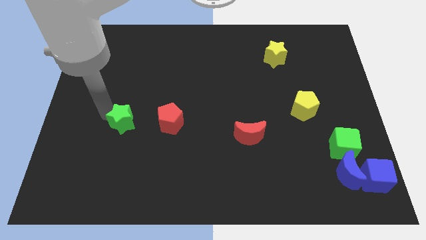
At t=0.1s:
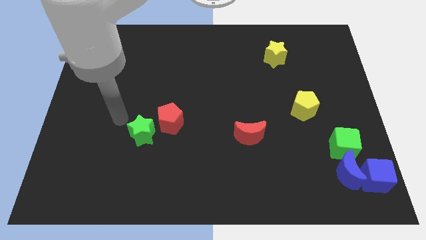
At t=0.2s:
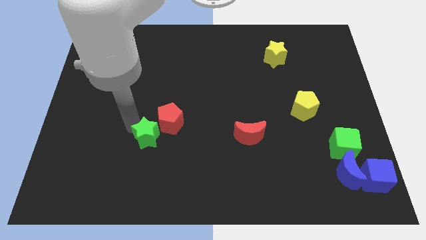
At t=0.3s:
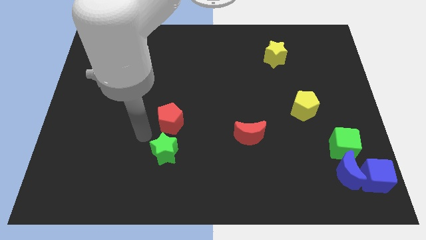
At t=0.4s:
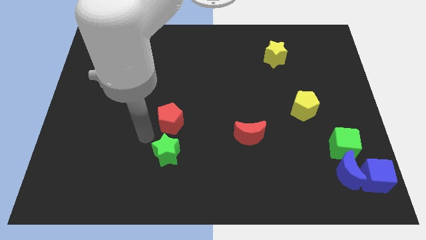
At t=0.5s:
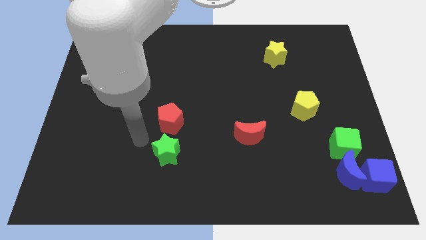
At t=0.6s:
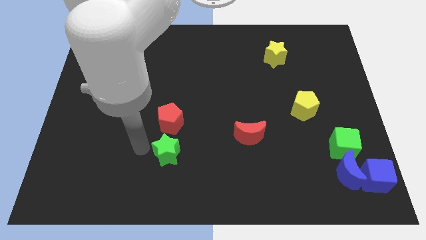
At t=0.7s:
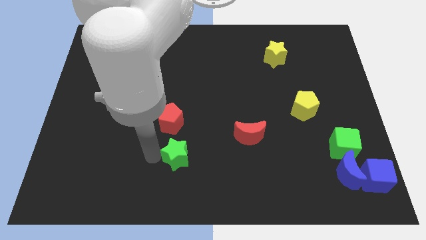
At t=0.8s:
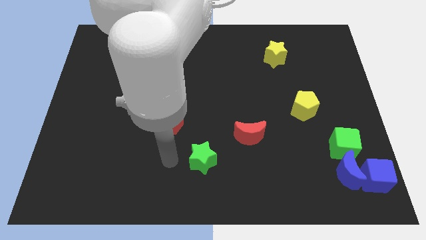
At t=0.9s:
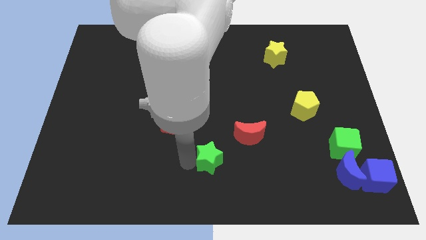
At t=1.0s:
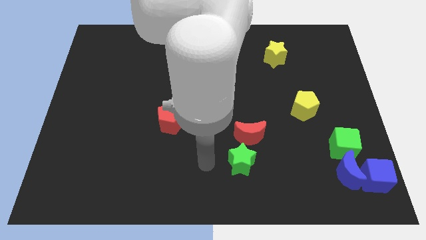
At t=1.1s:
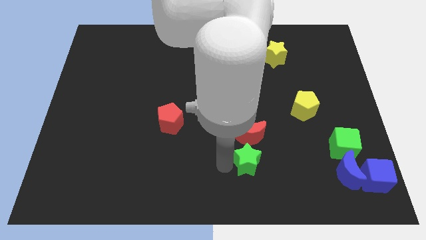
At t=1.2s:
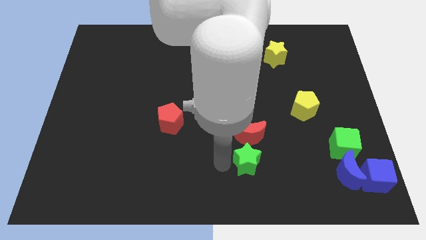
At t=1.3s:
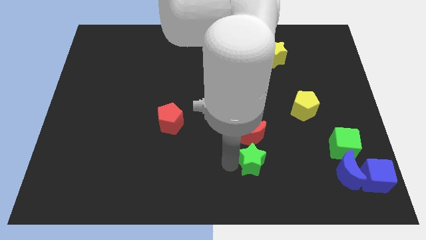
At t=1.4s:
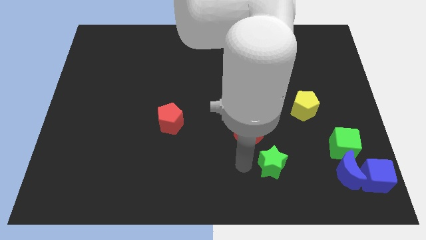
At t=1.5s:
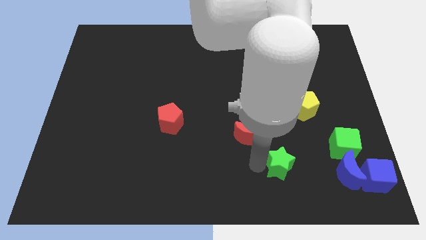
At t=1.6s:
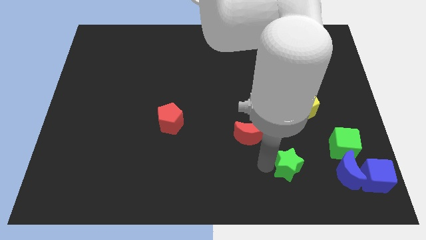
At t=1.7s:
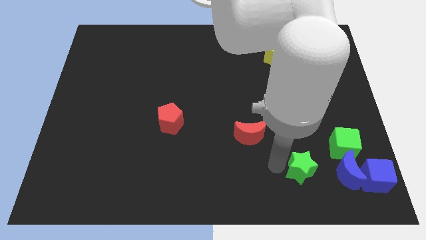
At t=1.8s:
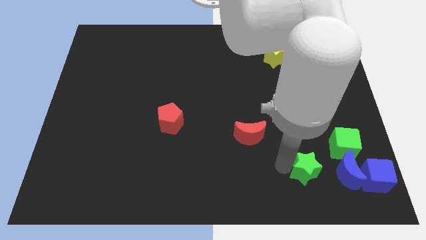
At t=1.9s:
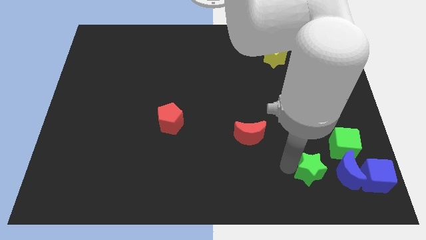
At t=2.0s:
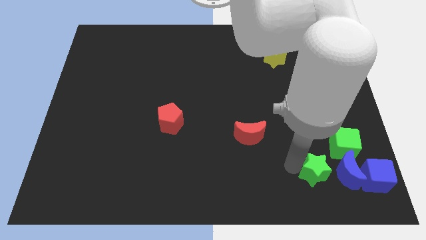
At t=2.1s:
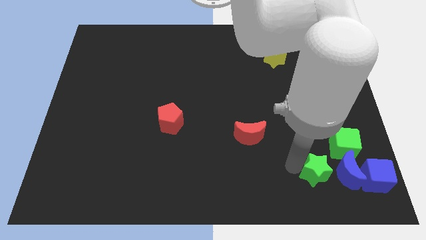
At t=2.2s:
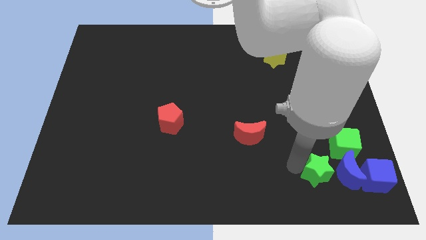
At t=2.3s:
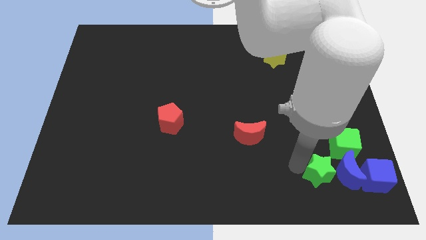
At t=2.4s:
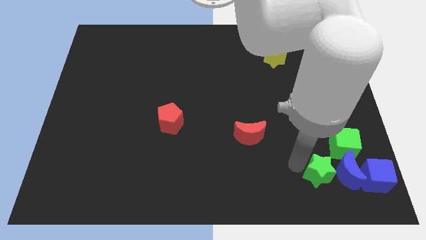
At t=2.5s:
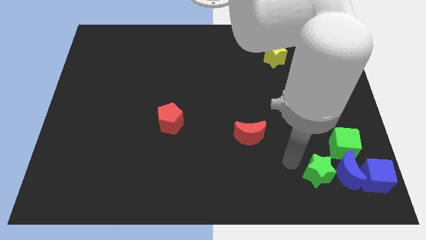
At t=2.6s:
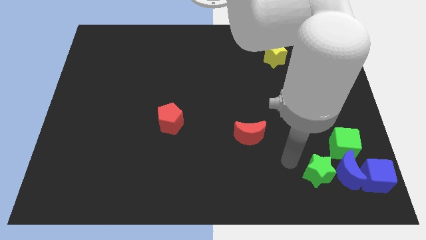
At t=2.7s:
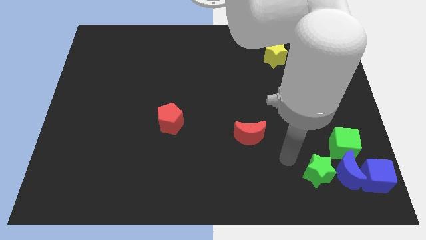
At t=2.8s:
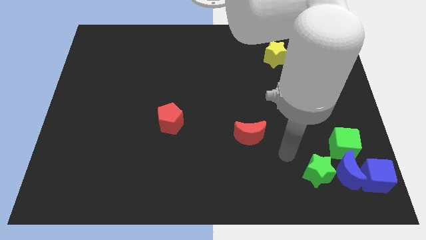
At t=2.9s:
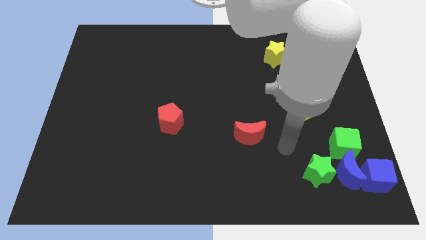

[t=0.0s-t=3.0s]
slide the green star to the left of the blue moon

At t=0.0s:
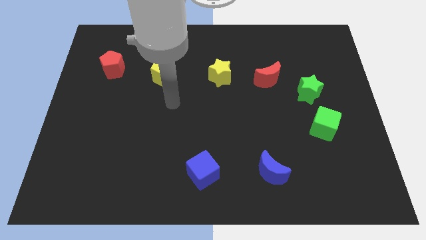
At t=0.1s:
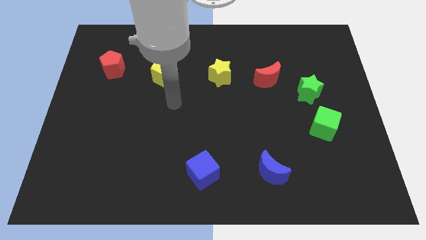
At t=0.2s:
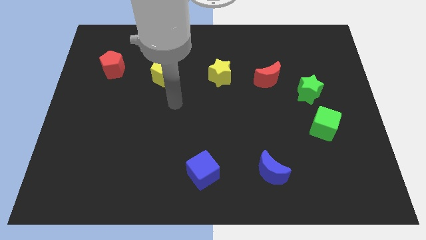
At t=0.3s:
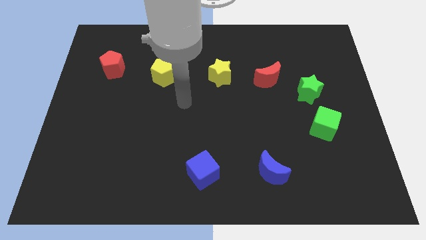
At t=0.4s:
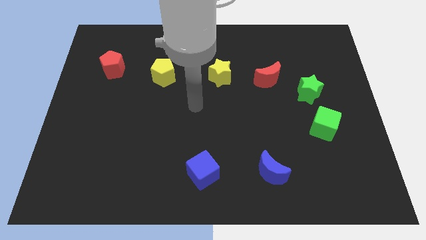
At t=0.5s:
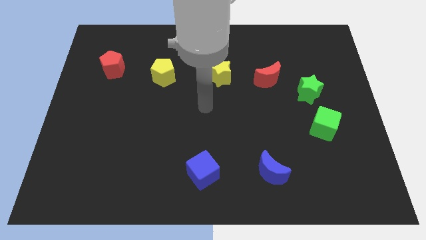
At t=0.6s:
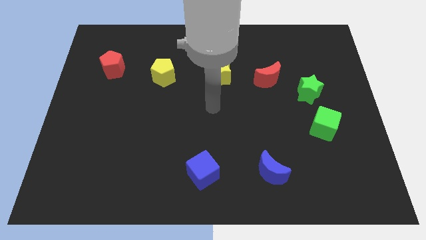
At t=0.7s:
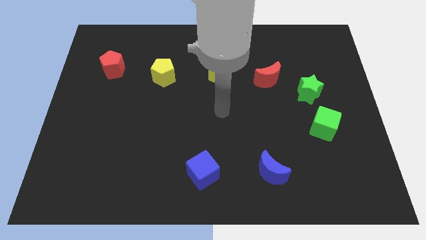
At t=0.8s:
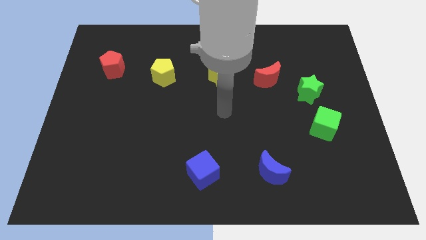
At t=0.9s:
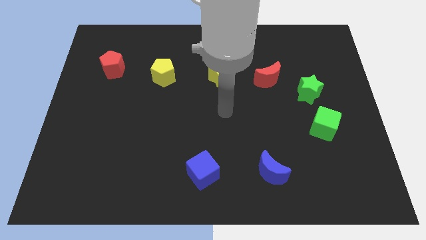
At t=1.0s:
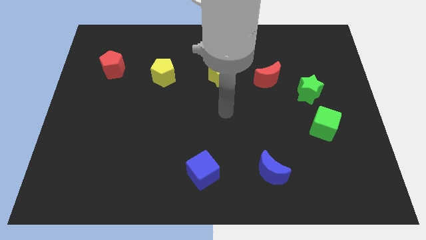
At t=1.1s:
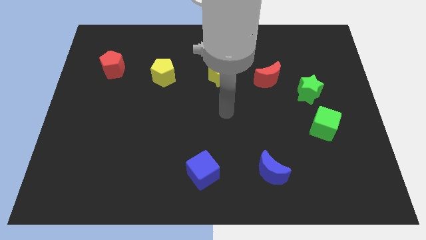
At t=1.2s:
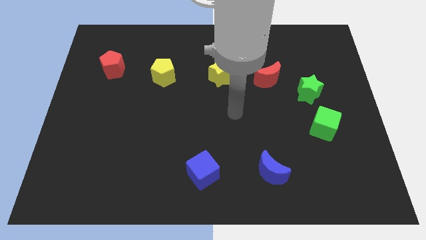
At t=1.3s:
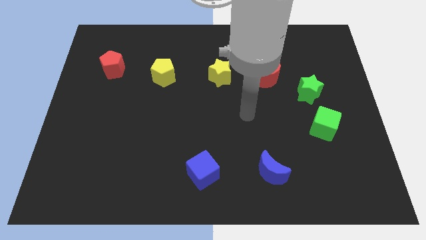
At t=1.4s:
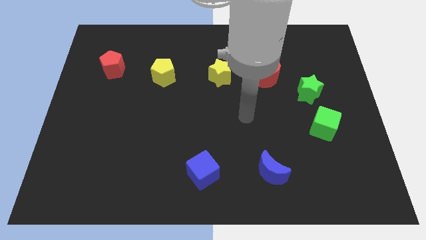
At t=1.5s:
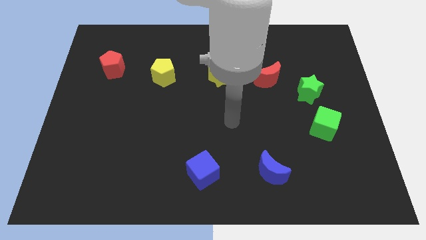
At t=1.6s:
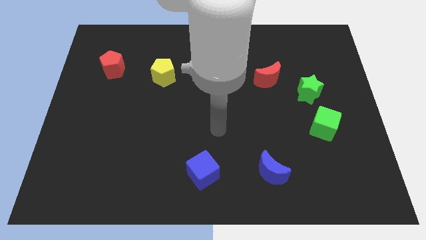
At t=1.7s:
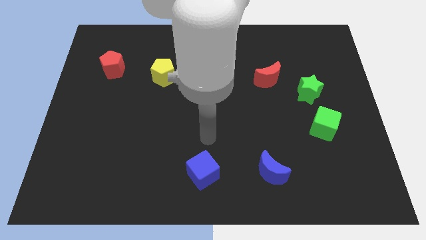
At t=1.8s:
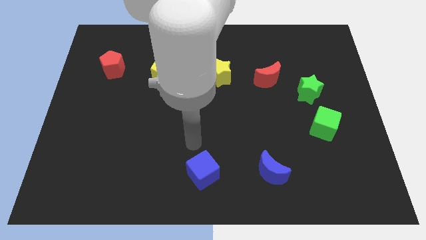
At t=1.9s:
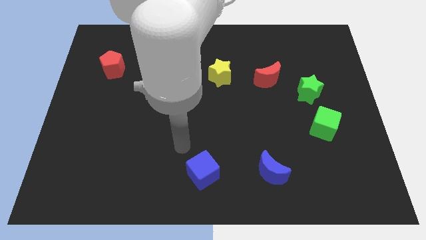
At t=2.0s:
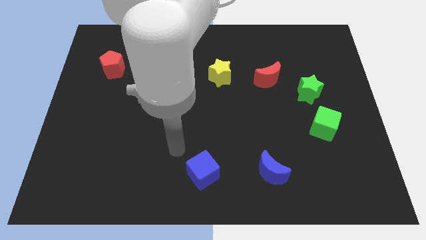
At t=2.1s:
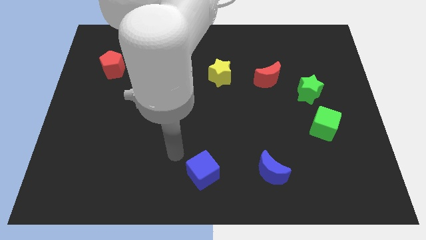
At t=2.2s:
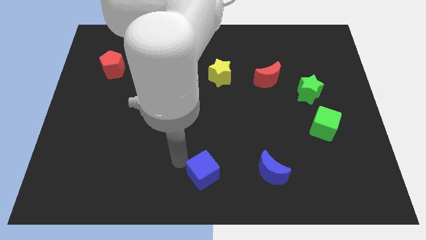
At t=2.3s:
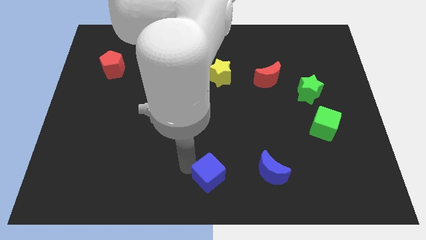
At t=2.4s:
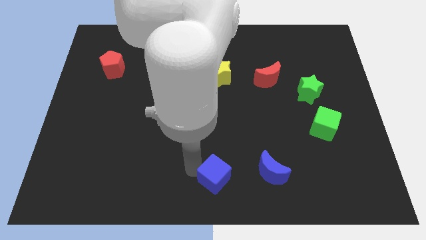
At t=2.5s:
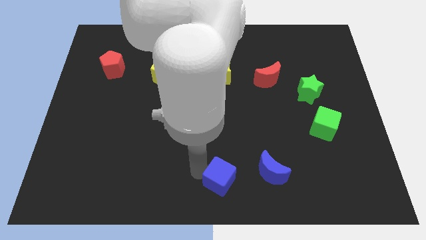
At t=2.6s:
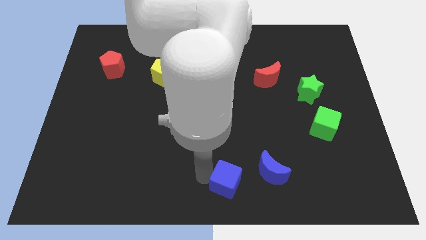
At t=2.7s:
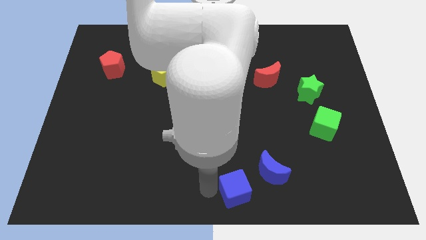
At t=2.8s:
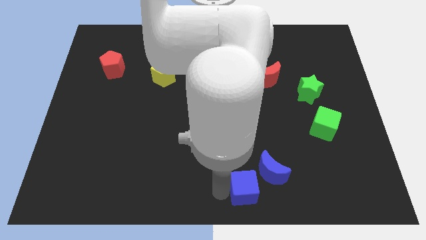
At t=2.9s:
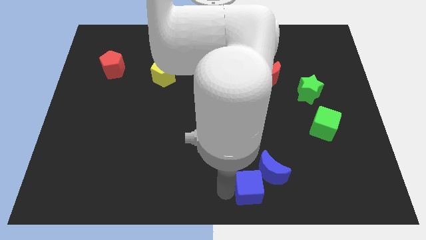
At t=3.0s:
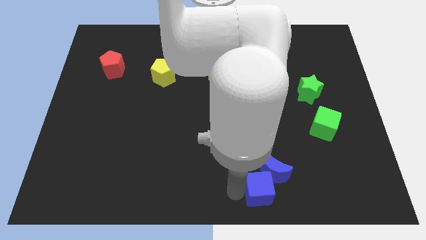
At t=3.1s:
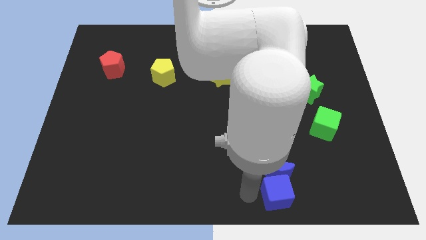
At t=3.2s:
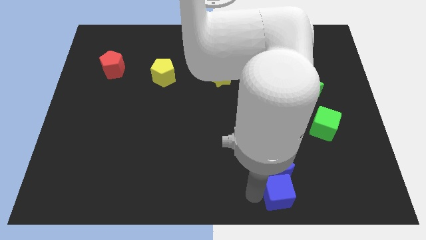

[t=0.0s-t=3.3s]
place the blue cube on the bottom of blue moon

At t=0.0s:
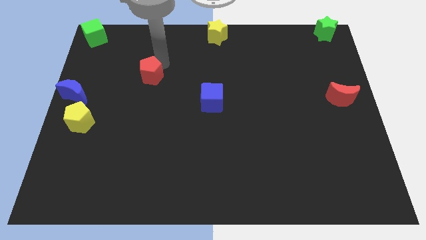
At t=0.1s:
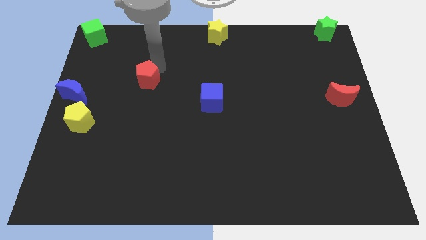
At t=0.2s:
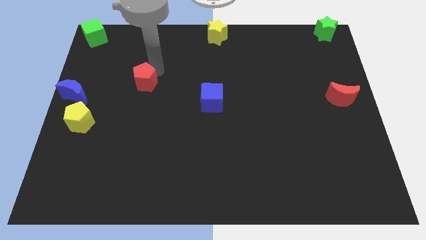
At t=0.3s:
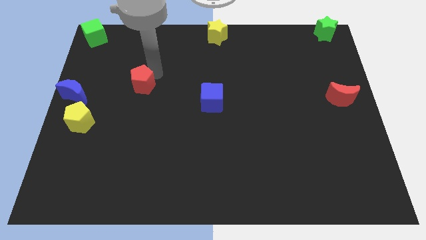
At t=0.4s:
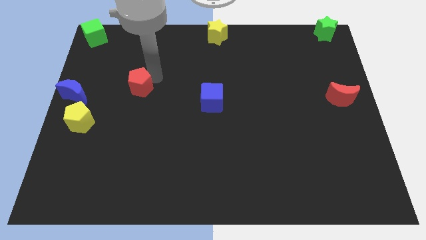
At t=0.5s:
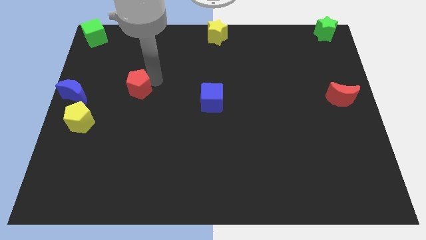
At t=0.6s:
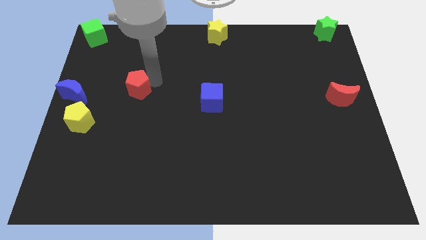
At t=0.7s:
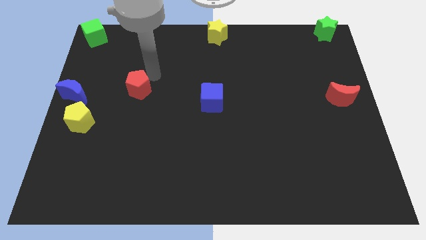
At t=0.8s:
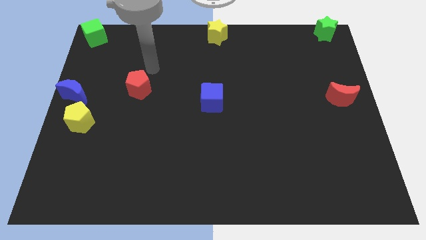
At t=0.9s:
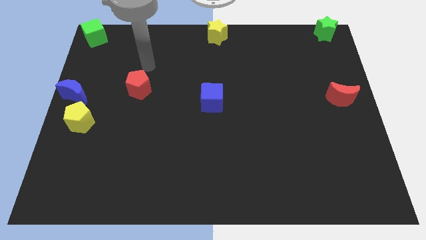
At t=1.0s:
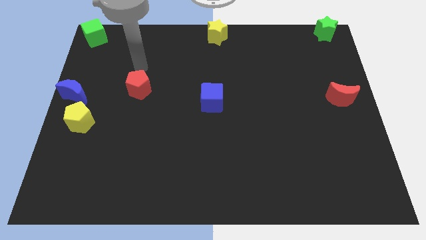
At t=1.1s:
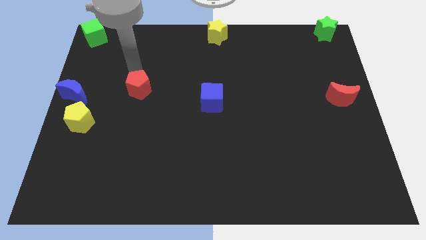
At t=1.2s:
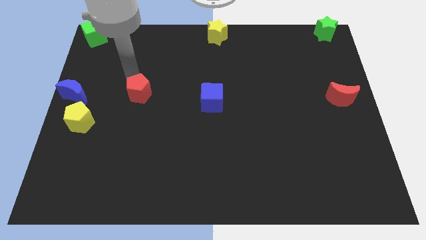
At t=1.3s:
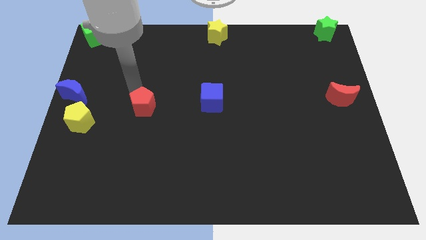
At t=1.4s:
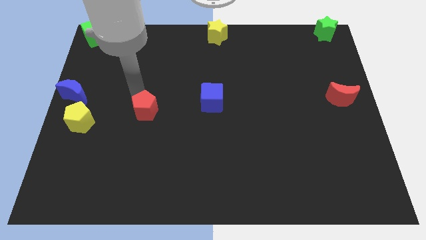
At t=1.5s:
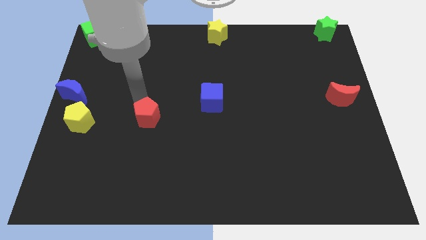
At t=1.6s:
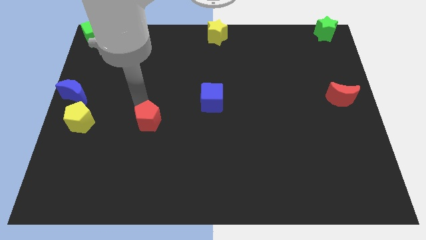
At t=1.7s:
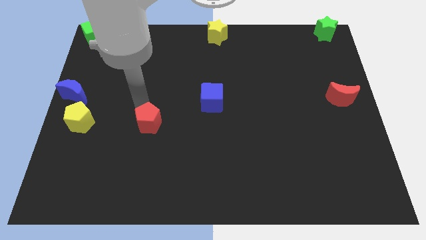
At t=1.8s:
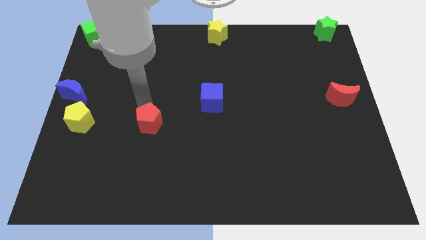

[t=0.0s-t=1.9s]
put the red pentagon to the right side of the yellow pentagon

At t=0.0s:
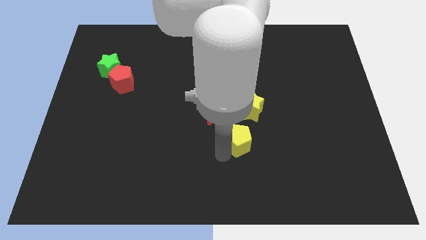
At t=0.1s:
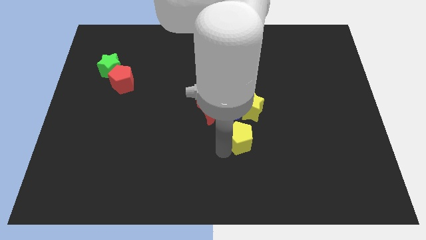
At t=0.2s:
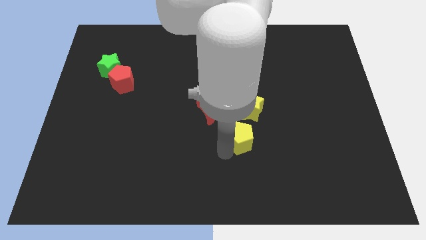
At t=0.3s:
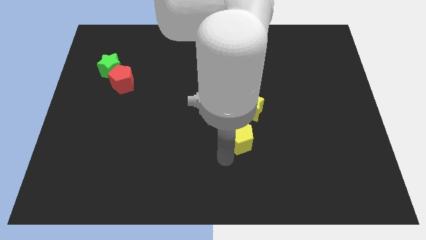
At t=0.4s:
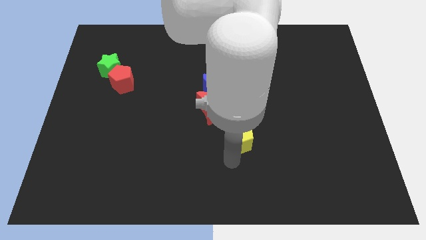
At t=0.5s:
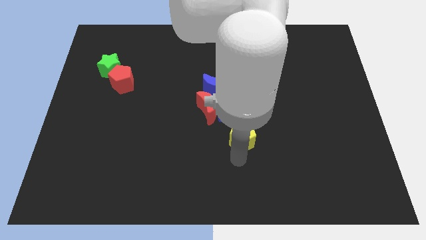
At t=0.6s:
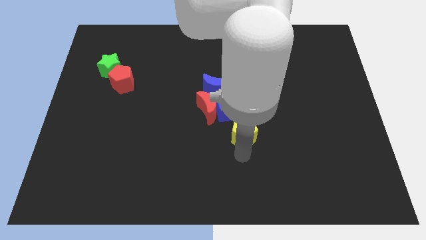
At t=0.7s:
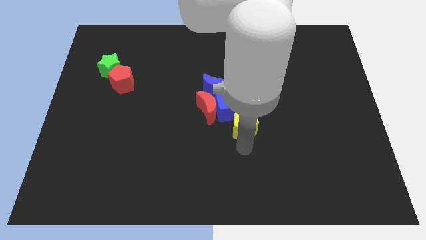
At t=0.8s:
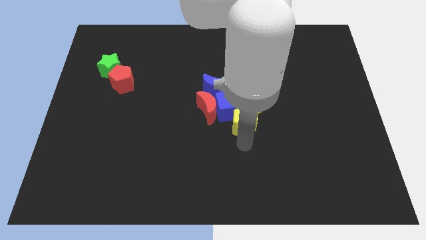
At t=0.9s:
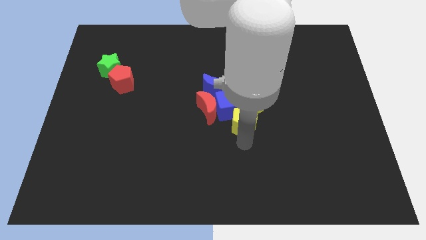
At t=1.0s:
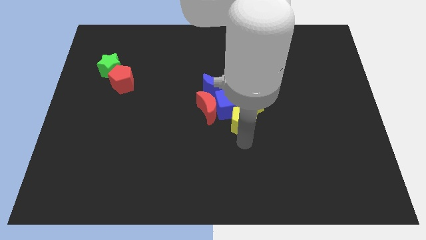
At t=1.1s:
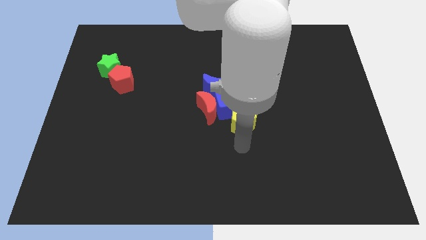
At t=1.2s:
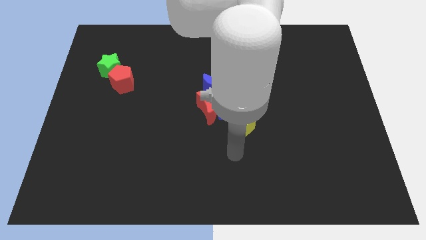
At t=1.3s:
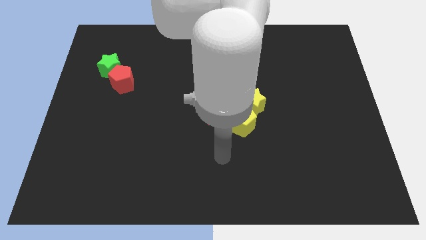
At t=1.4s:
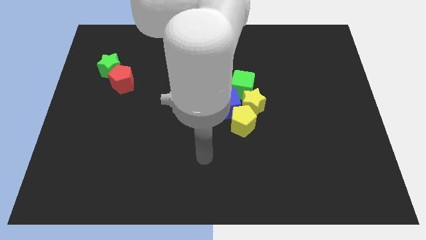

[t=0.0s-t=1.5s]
move the yellow pentagon to the bottom of yellow star blue cube
